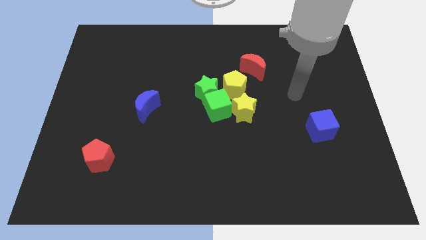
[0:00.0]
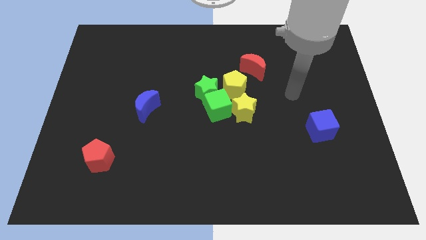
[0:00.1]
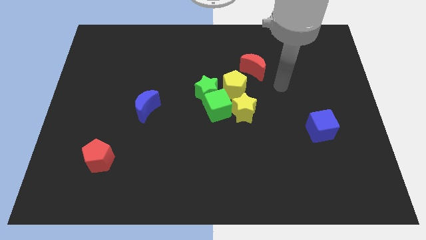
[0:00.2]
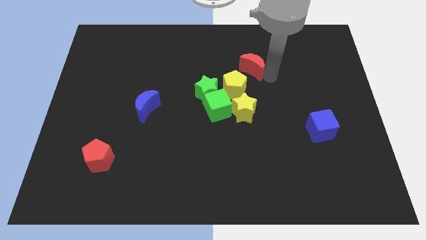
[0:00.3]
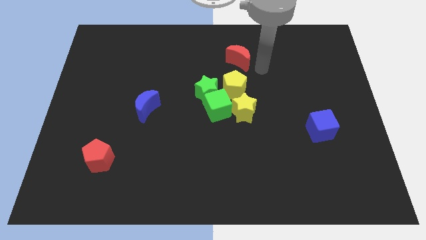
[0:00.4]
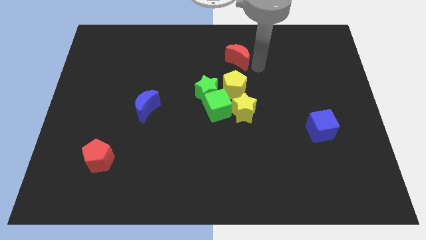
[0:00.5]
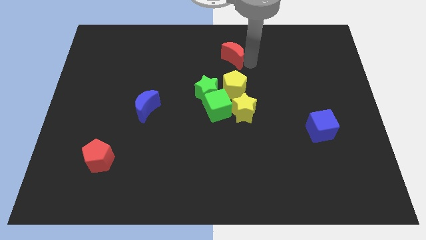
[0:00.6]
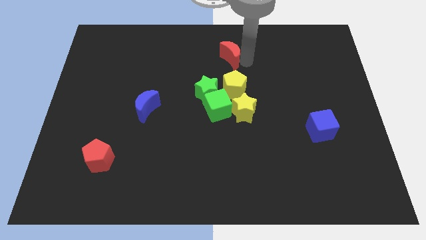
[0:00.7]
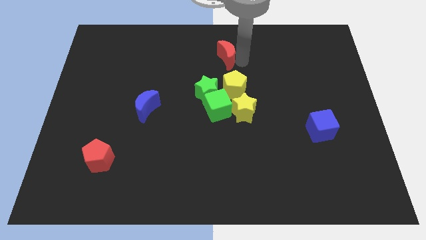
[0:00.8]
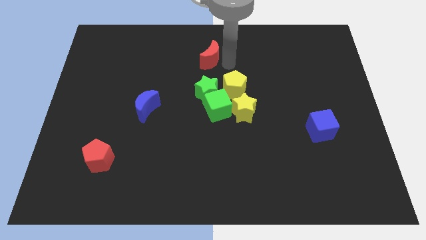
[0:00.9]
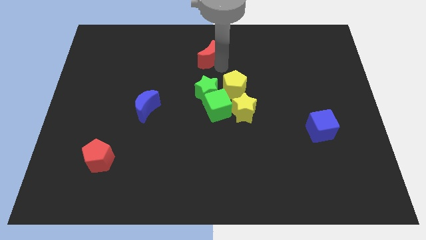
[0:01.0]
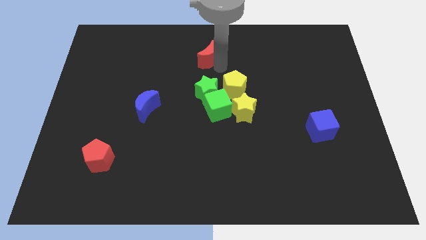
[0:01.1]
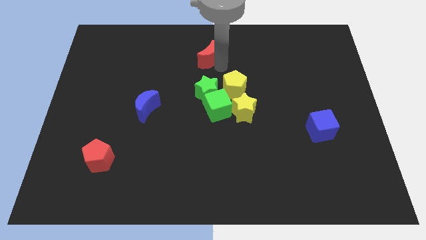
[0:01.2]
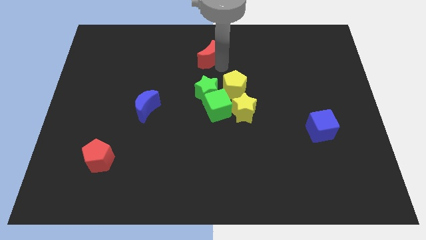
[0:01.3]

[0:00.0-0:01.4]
move the red moon to the top side of the green star

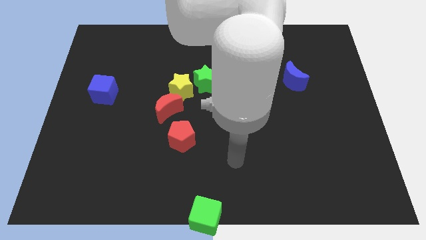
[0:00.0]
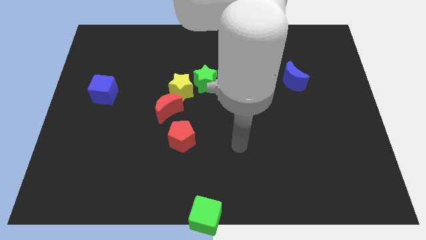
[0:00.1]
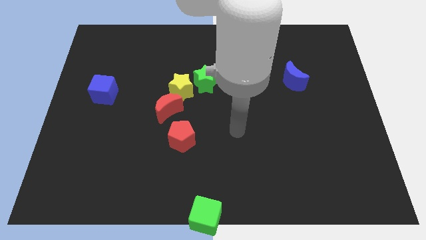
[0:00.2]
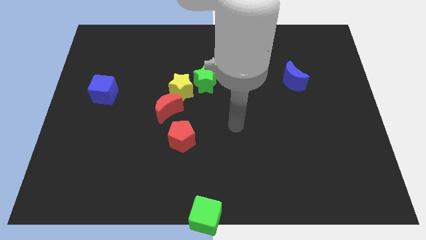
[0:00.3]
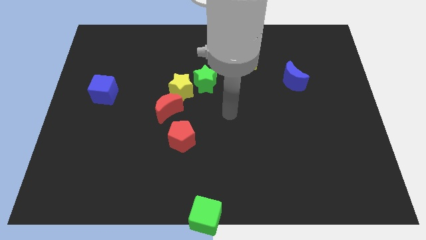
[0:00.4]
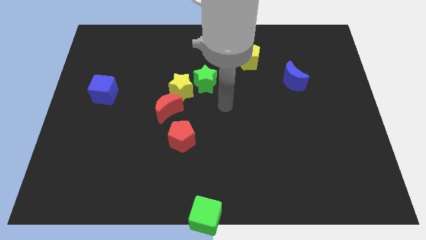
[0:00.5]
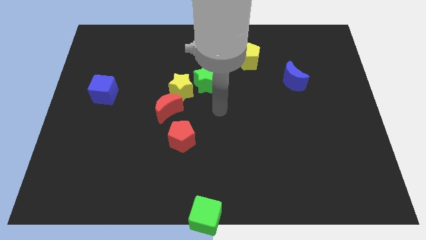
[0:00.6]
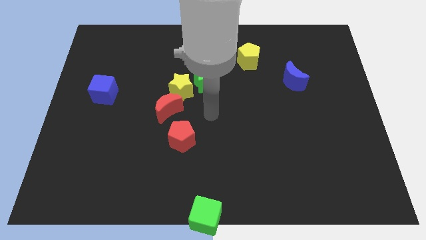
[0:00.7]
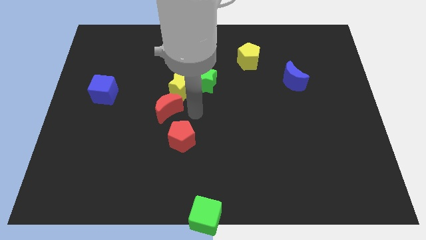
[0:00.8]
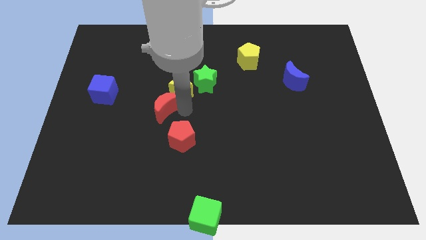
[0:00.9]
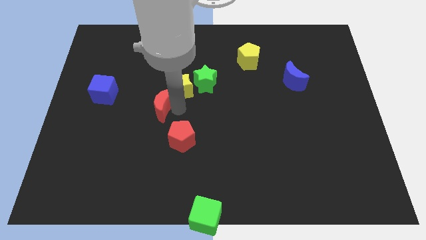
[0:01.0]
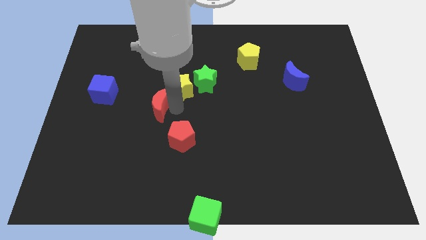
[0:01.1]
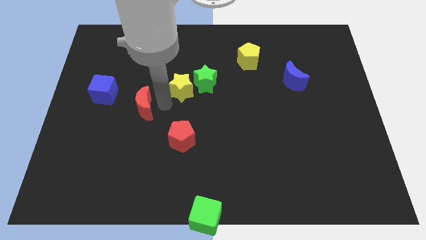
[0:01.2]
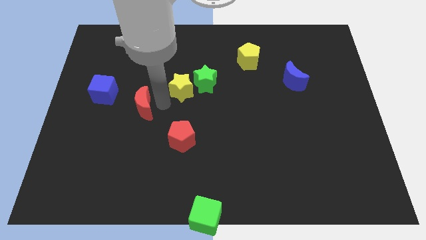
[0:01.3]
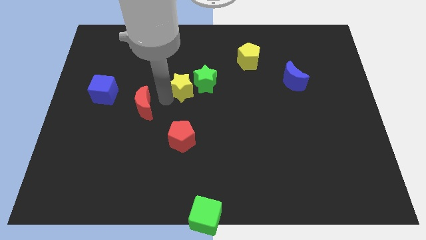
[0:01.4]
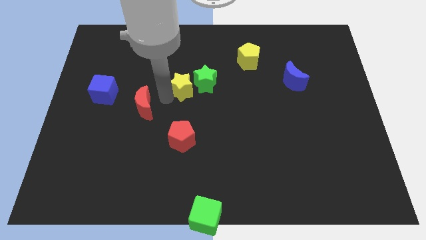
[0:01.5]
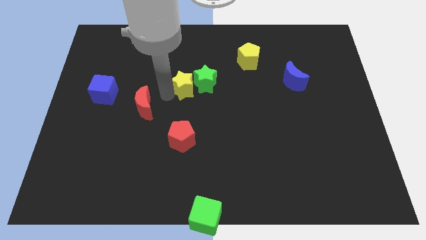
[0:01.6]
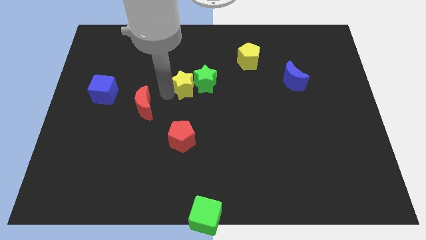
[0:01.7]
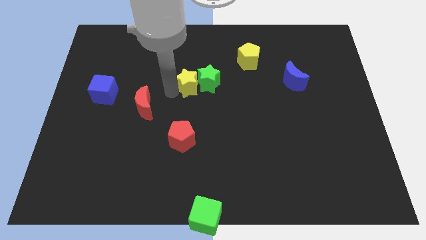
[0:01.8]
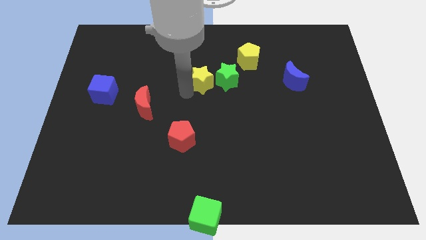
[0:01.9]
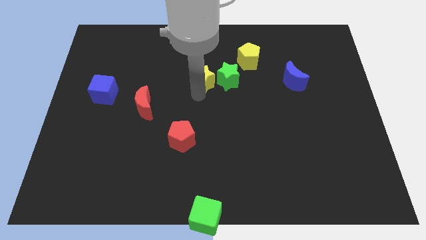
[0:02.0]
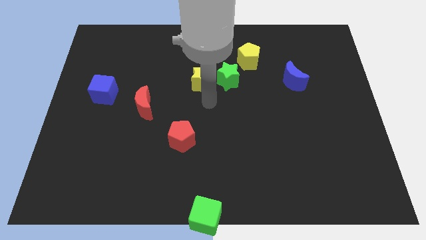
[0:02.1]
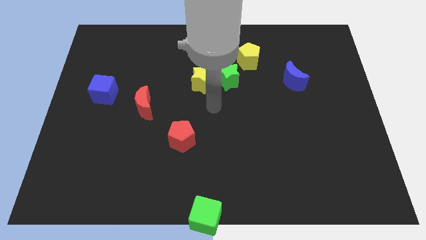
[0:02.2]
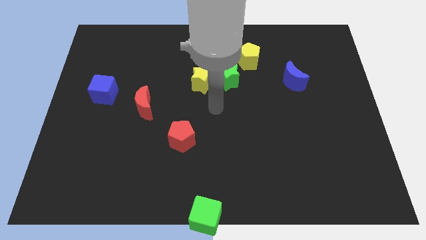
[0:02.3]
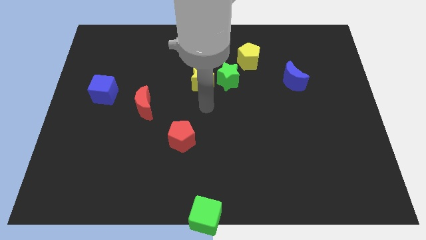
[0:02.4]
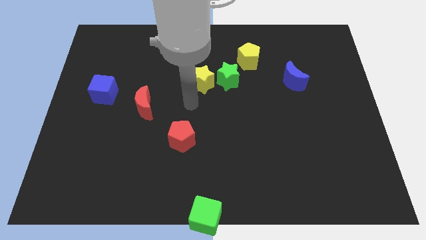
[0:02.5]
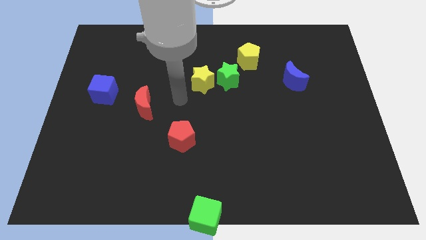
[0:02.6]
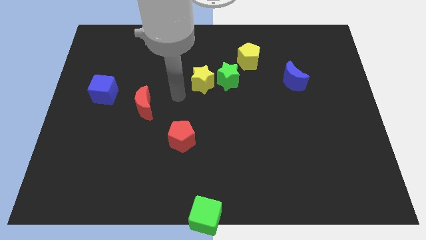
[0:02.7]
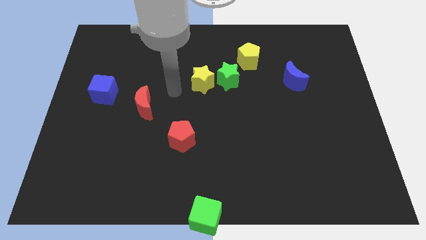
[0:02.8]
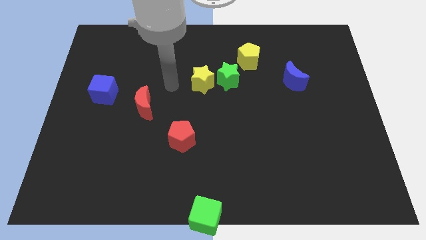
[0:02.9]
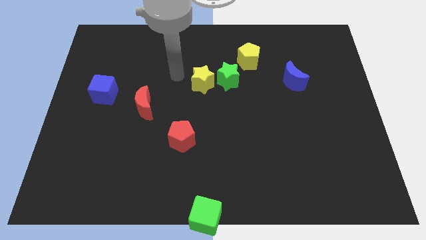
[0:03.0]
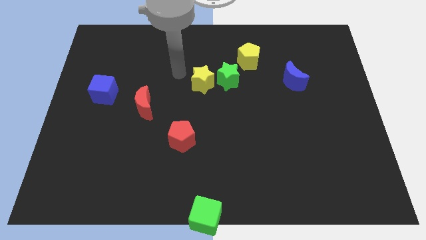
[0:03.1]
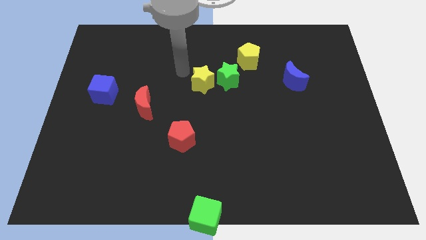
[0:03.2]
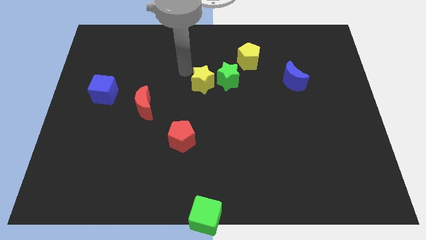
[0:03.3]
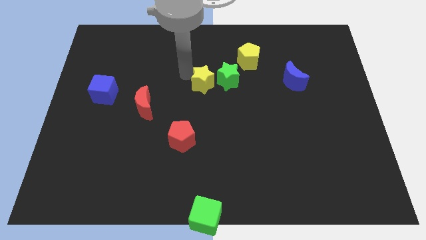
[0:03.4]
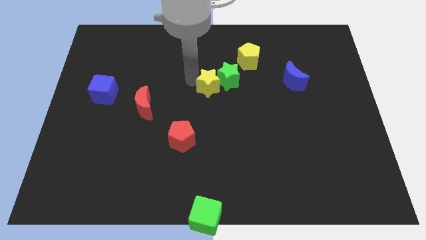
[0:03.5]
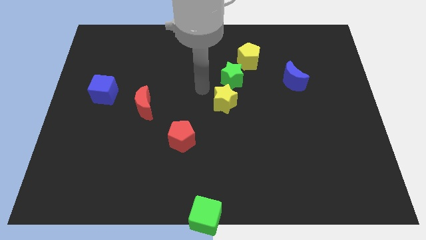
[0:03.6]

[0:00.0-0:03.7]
separate yellow star and red moon

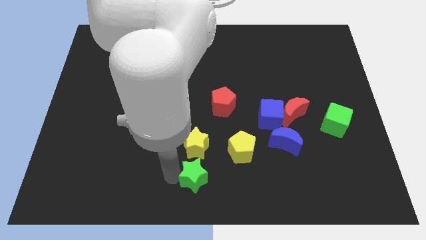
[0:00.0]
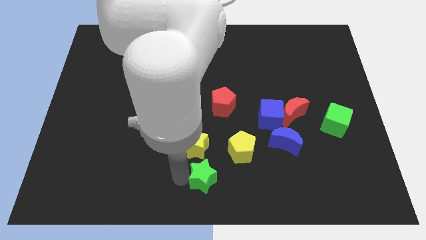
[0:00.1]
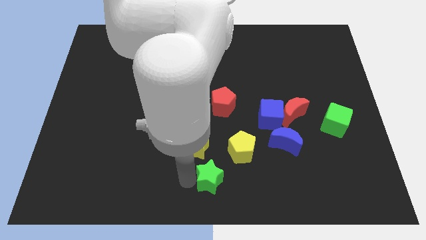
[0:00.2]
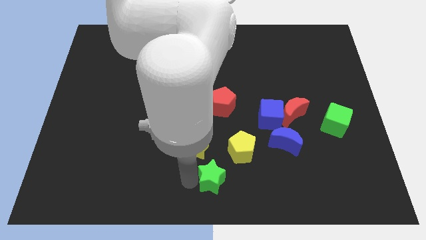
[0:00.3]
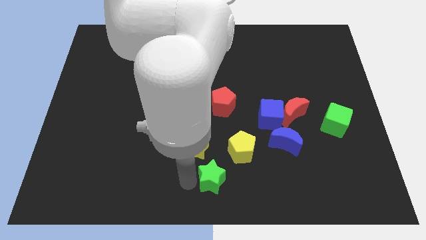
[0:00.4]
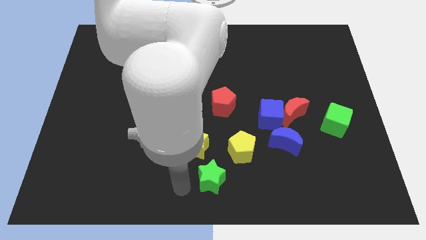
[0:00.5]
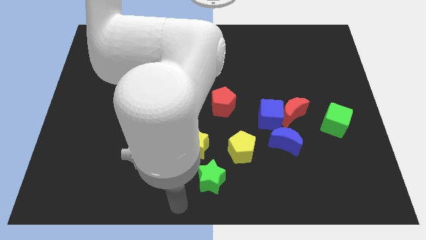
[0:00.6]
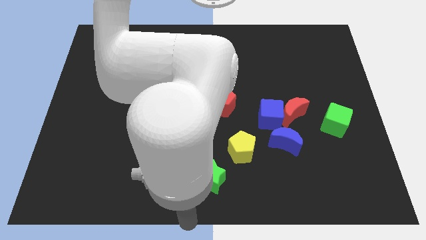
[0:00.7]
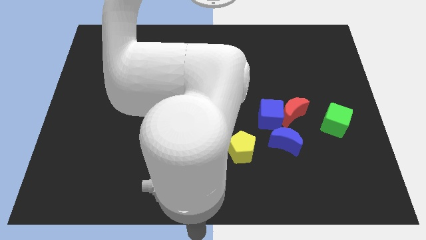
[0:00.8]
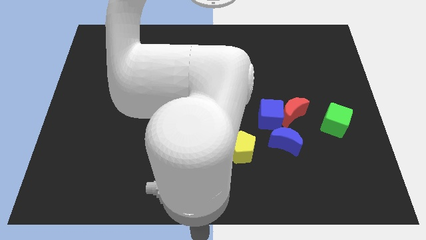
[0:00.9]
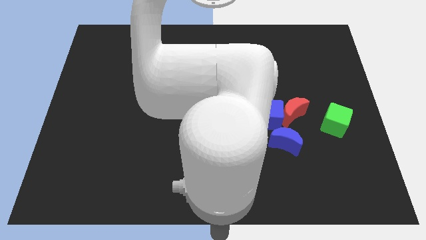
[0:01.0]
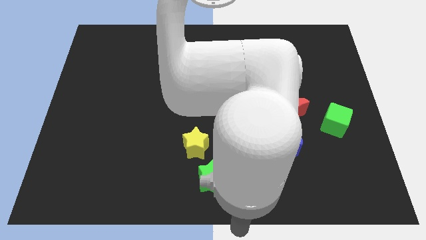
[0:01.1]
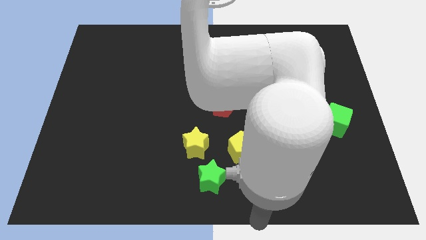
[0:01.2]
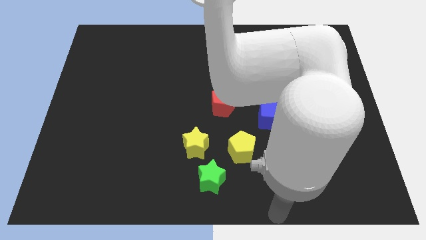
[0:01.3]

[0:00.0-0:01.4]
slightly move the green star to the bottom of the yellow star and yellow pentagon

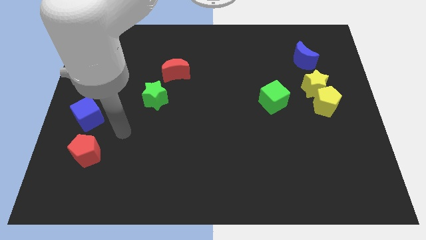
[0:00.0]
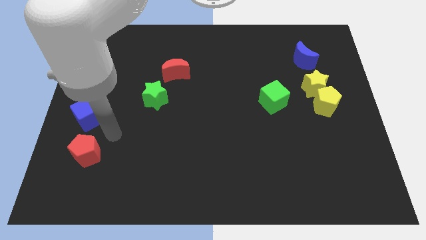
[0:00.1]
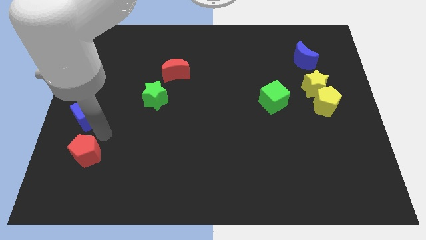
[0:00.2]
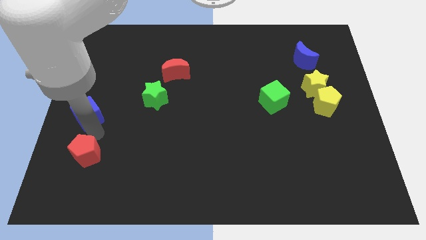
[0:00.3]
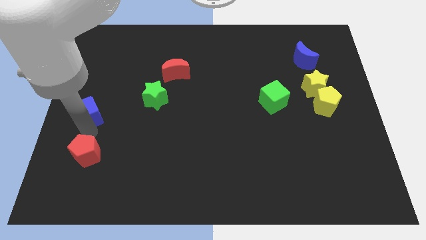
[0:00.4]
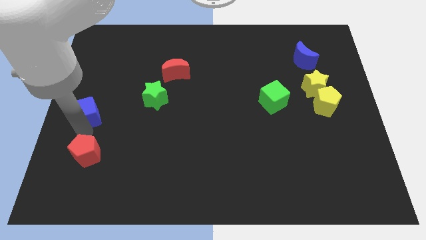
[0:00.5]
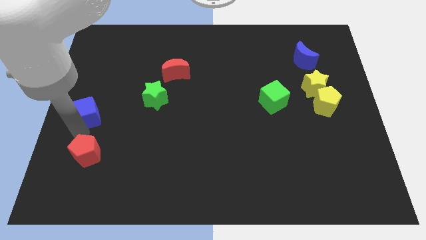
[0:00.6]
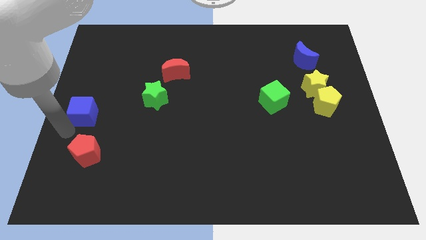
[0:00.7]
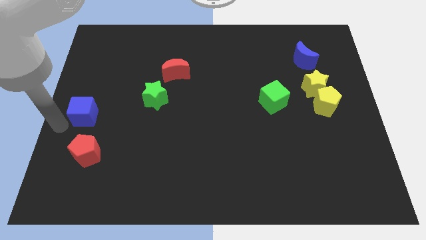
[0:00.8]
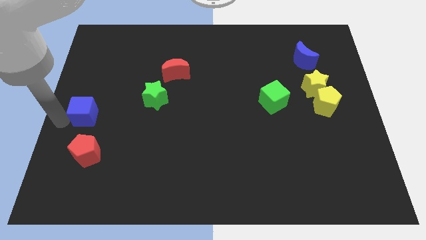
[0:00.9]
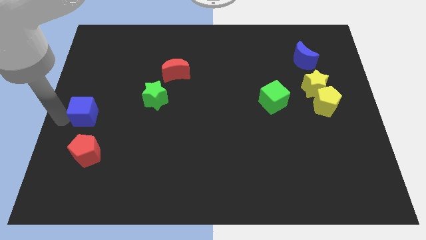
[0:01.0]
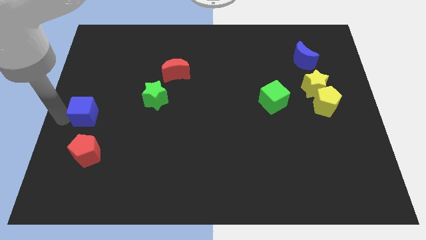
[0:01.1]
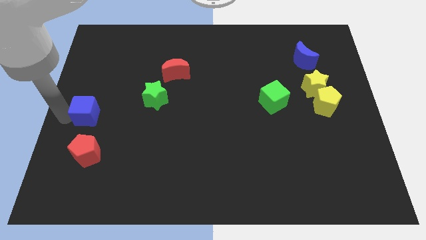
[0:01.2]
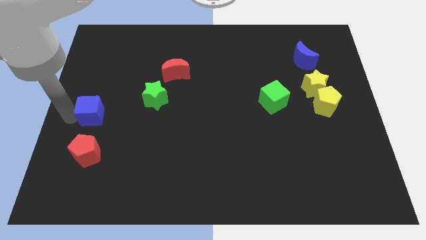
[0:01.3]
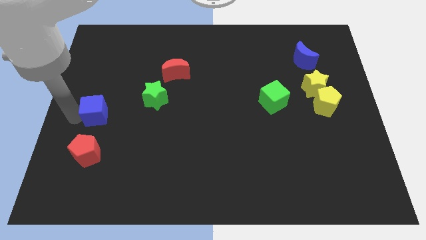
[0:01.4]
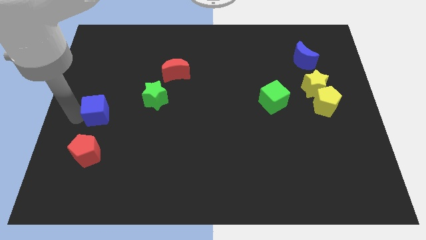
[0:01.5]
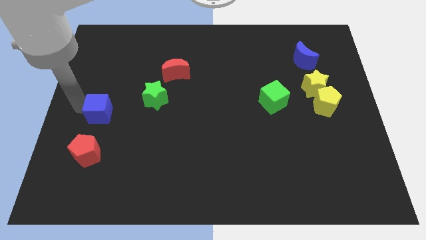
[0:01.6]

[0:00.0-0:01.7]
move blue cube slightly to the right

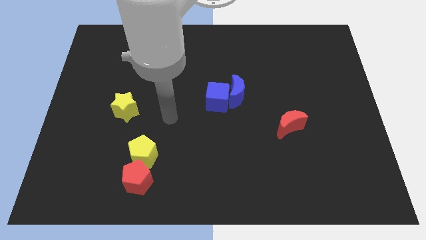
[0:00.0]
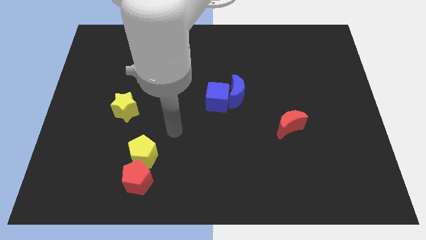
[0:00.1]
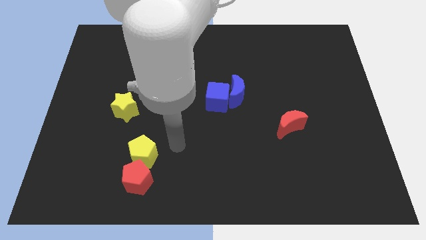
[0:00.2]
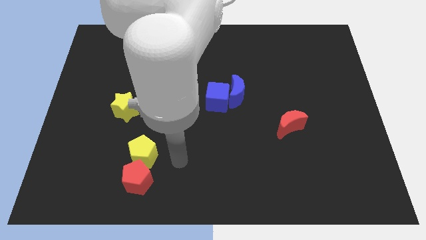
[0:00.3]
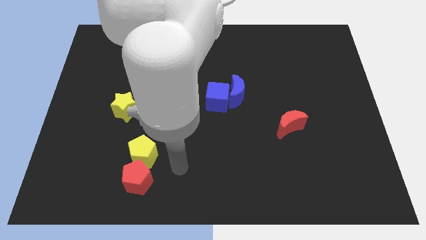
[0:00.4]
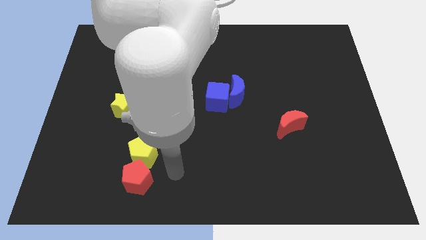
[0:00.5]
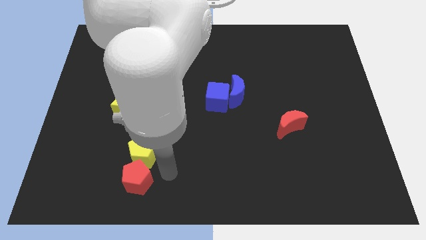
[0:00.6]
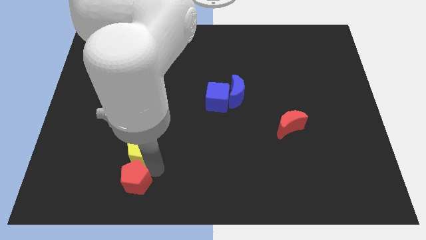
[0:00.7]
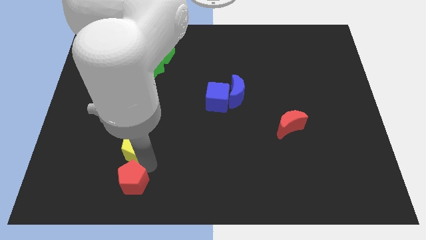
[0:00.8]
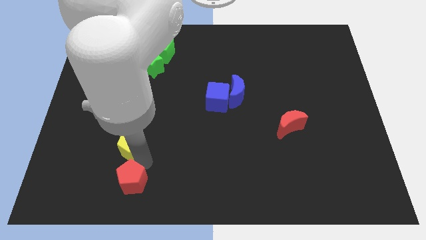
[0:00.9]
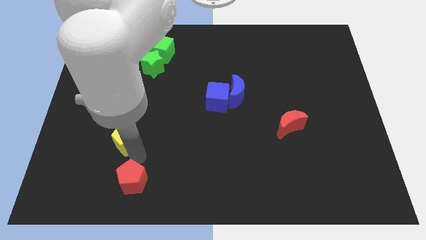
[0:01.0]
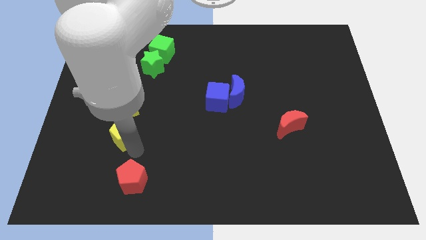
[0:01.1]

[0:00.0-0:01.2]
separate the yellow pentagons from the red pentagon
